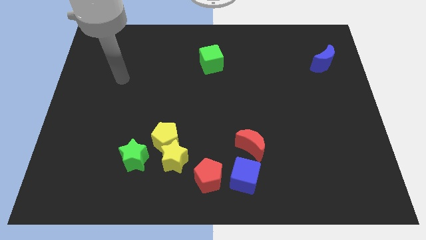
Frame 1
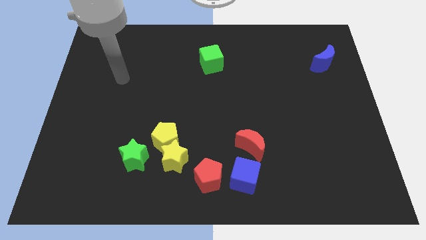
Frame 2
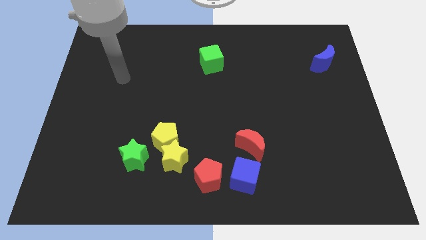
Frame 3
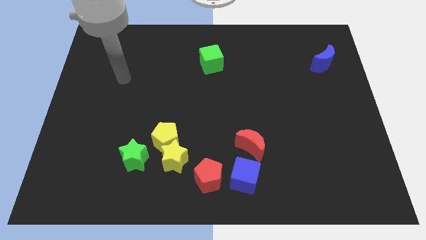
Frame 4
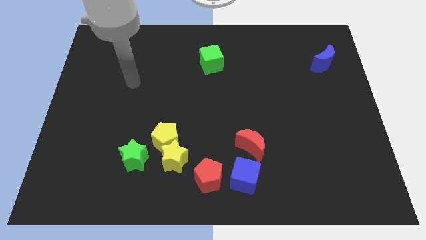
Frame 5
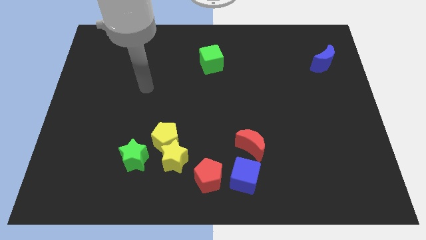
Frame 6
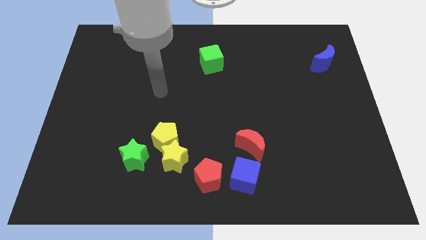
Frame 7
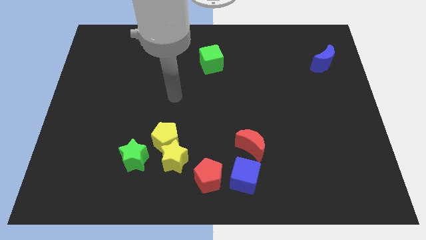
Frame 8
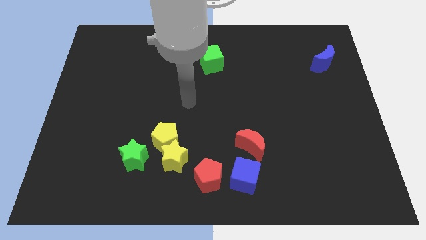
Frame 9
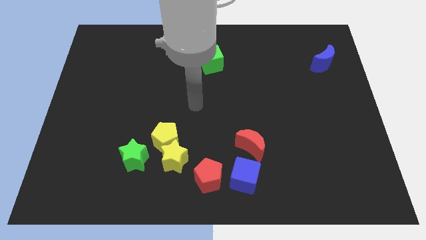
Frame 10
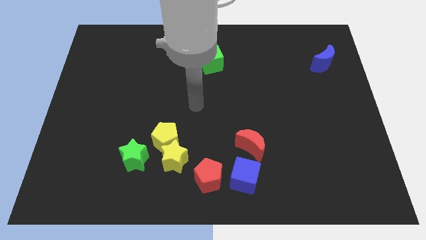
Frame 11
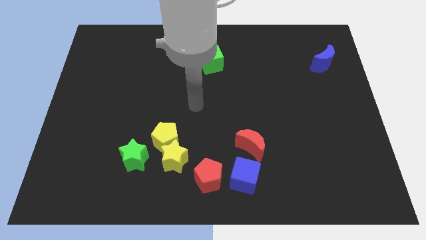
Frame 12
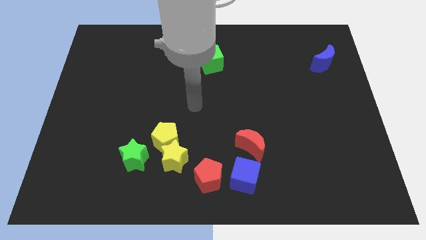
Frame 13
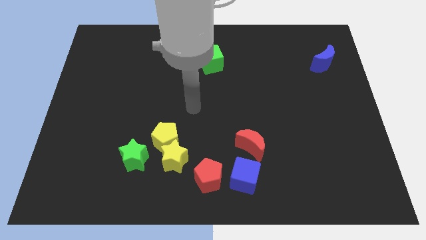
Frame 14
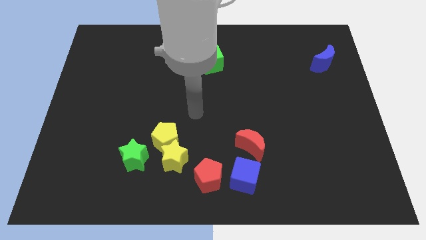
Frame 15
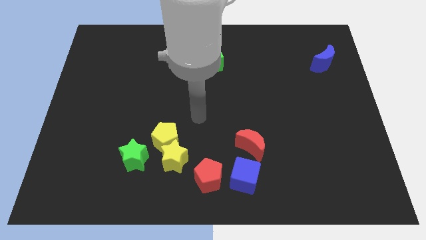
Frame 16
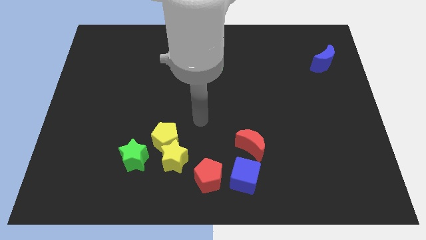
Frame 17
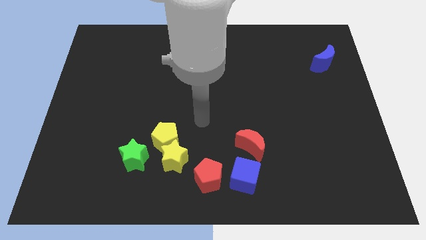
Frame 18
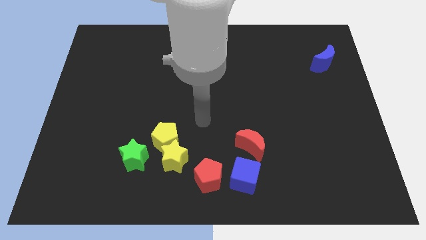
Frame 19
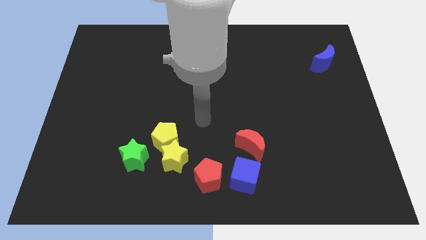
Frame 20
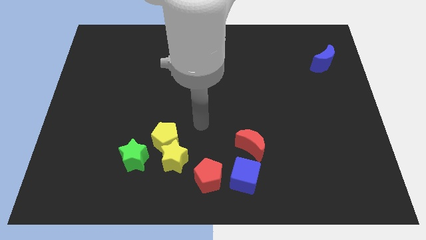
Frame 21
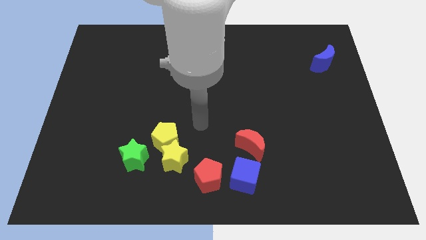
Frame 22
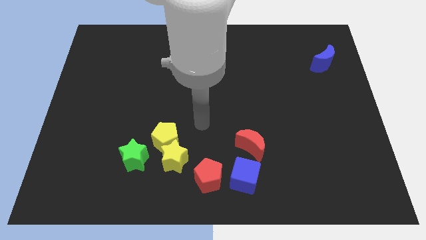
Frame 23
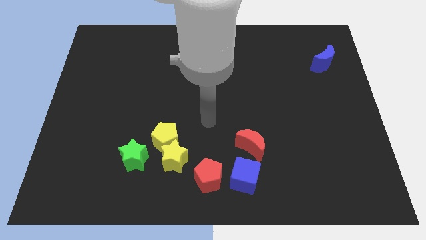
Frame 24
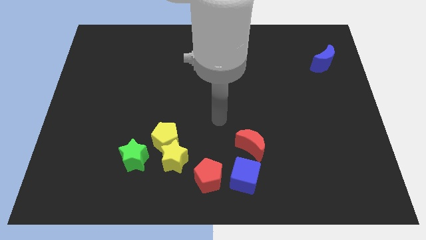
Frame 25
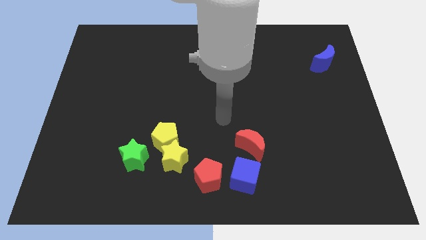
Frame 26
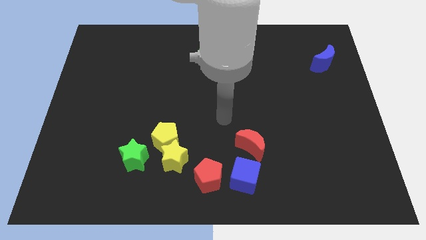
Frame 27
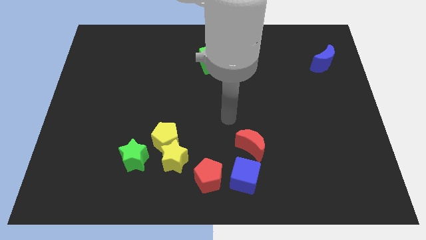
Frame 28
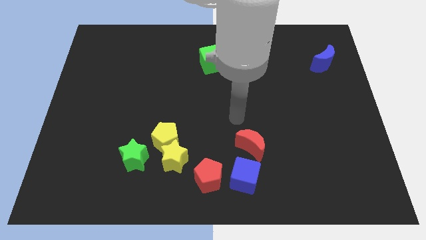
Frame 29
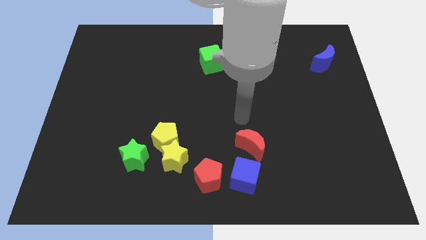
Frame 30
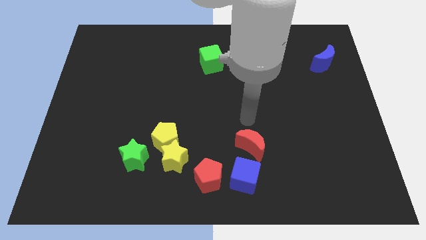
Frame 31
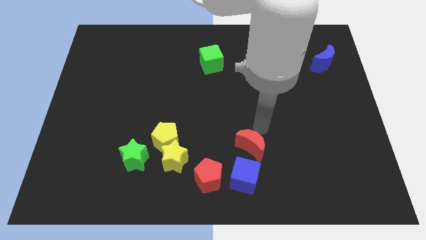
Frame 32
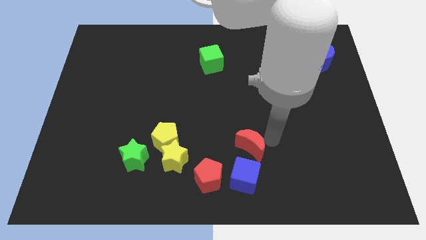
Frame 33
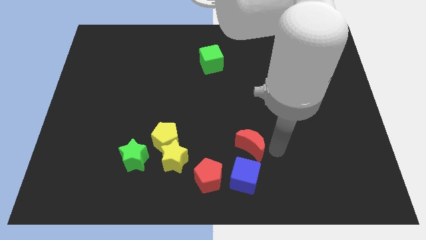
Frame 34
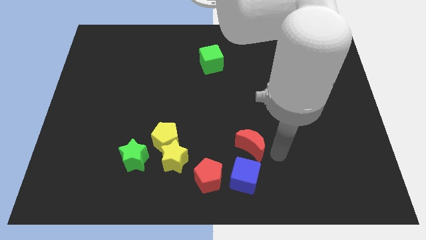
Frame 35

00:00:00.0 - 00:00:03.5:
place your arm to the right of red moon

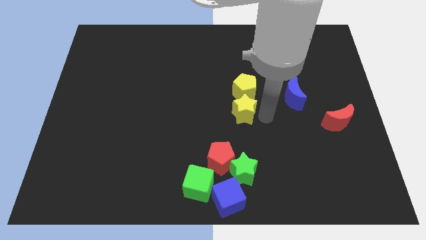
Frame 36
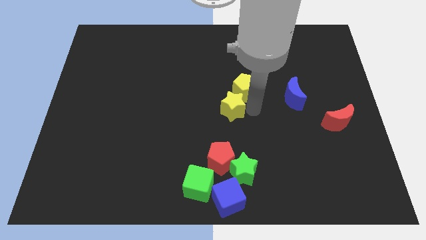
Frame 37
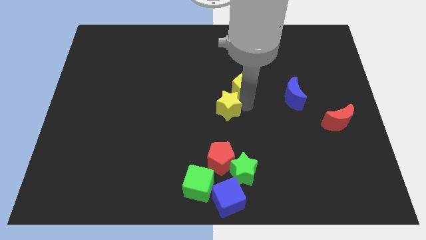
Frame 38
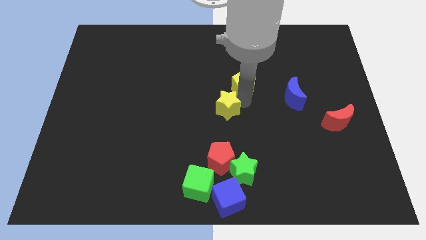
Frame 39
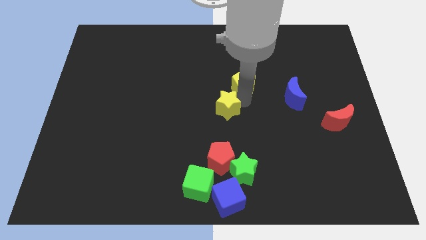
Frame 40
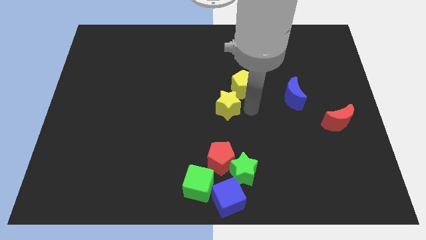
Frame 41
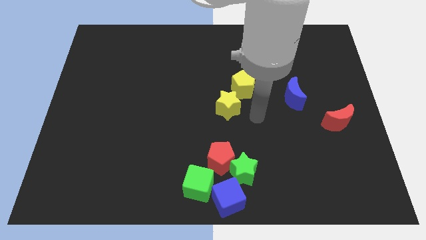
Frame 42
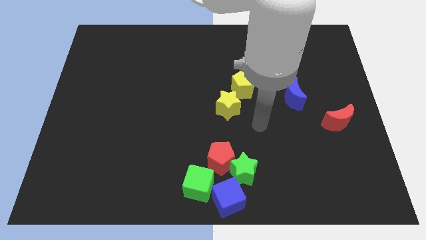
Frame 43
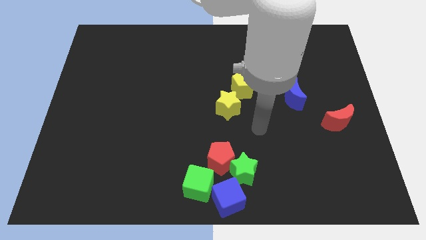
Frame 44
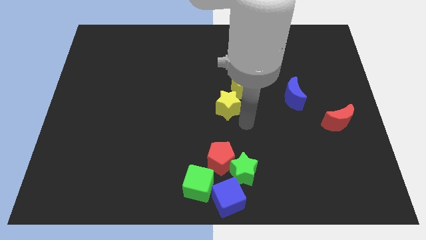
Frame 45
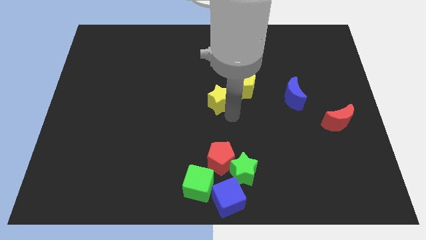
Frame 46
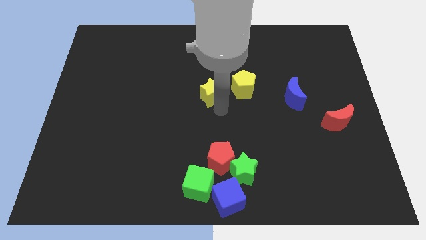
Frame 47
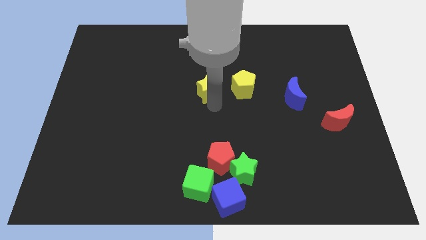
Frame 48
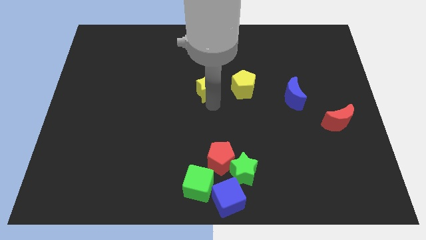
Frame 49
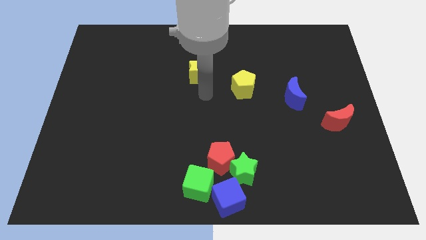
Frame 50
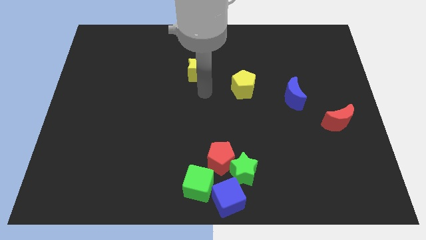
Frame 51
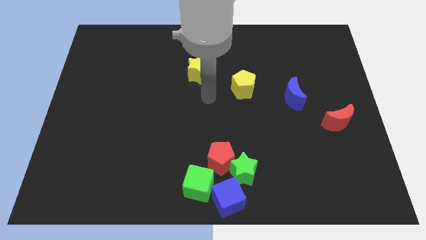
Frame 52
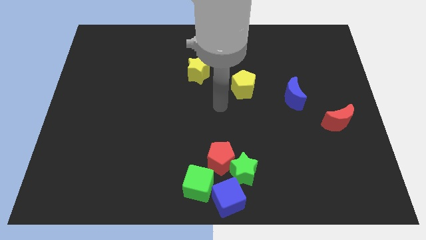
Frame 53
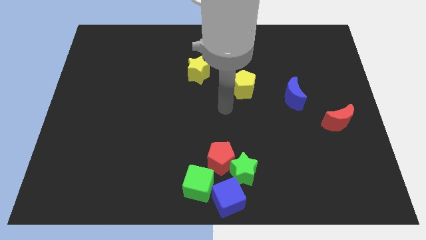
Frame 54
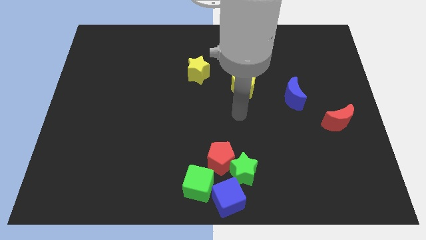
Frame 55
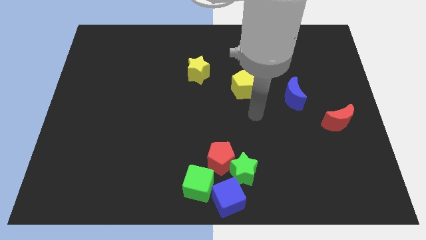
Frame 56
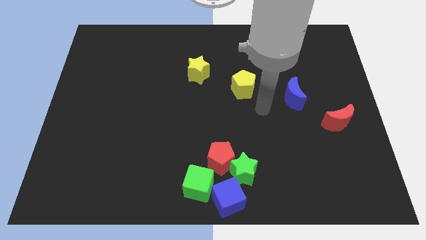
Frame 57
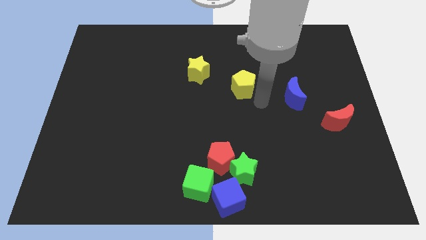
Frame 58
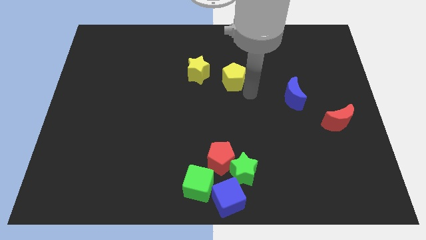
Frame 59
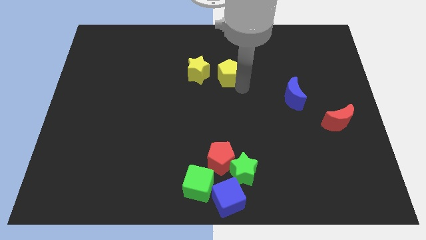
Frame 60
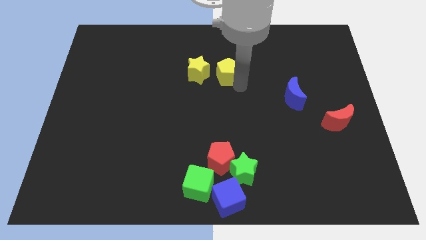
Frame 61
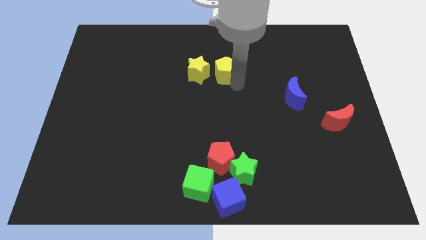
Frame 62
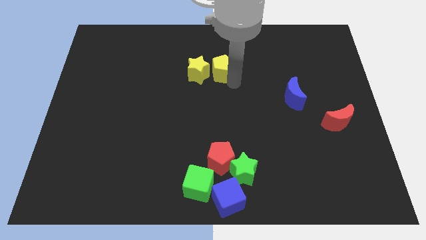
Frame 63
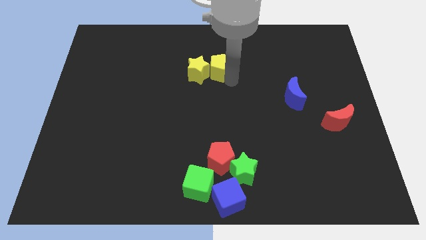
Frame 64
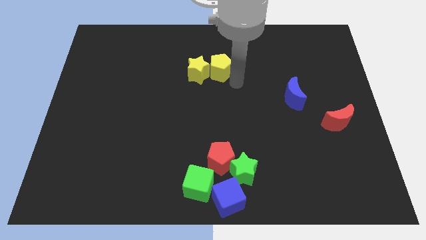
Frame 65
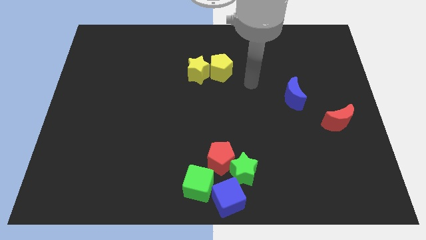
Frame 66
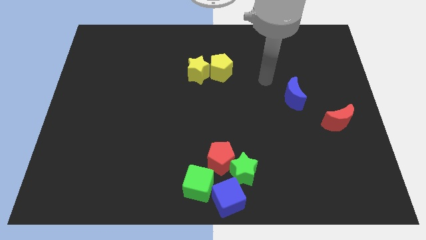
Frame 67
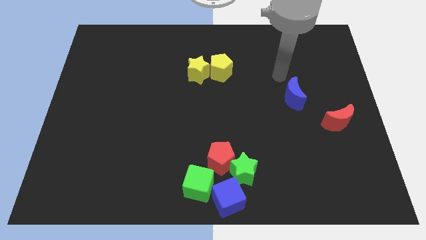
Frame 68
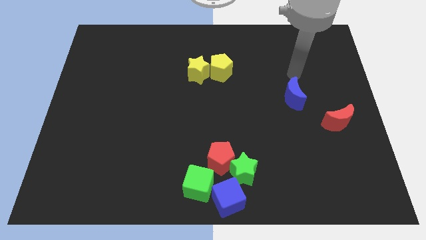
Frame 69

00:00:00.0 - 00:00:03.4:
push the yellow star to the left side of the yellow pentagon

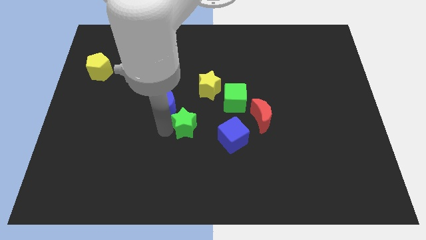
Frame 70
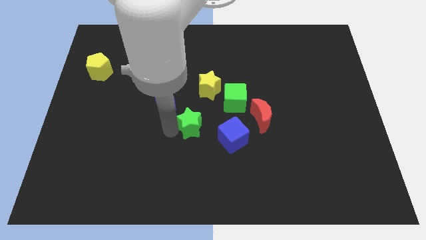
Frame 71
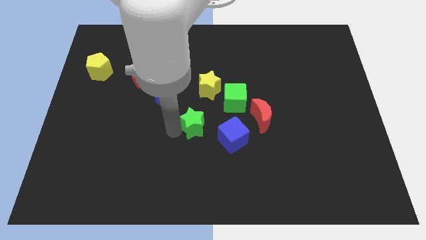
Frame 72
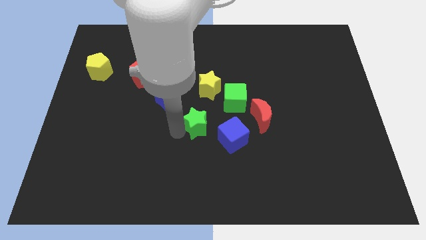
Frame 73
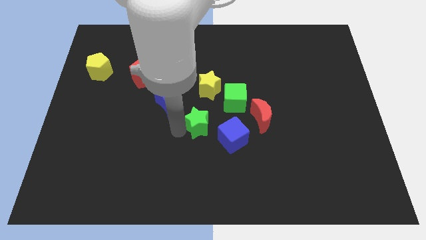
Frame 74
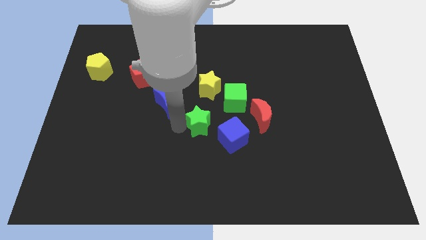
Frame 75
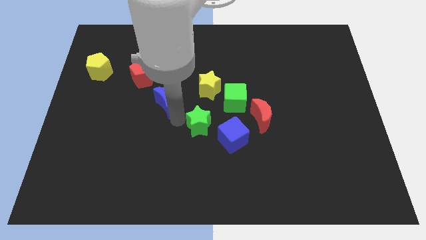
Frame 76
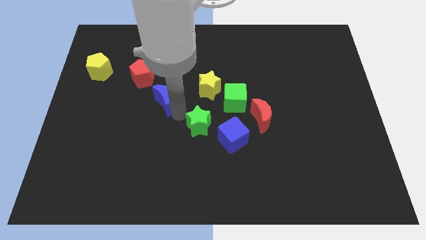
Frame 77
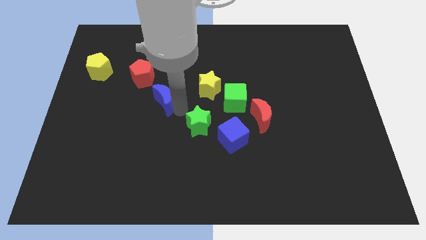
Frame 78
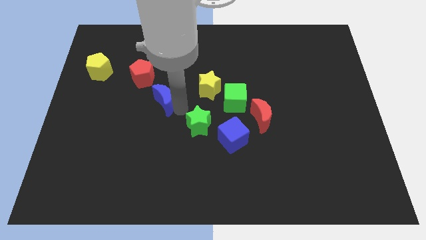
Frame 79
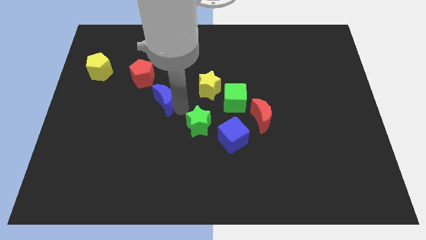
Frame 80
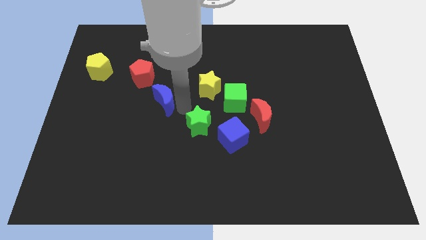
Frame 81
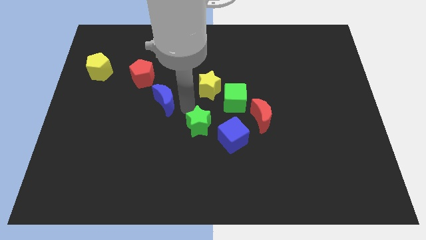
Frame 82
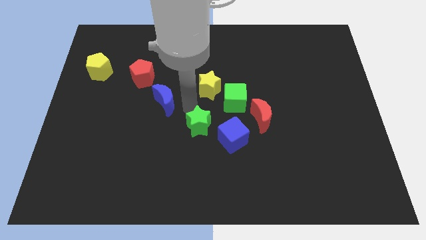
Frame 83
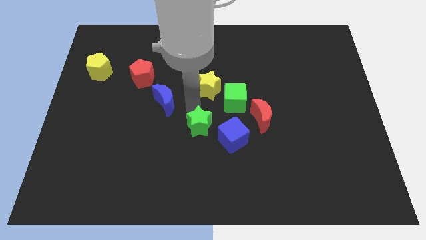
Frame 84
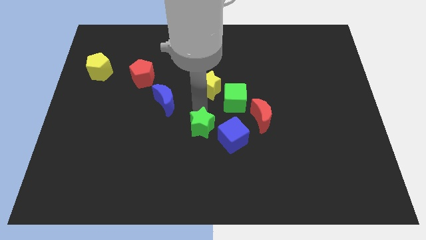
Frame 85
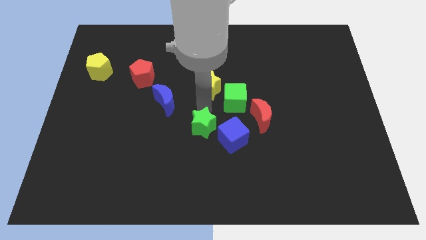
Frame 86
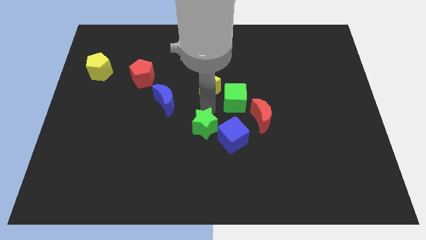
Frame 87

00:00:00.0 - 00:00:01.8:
move the green star below the yellow star

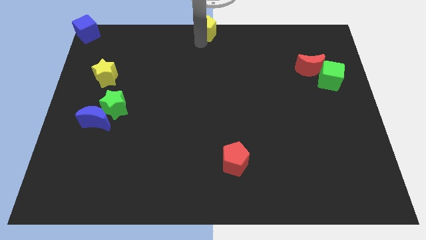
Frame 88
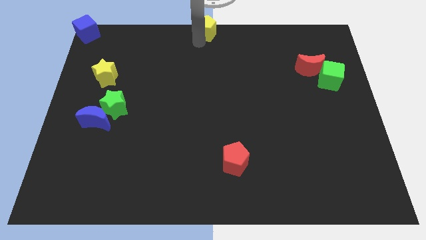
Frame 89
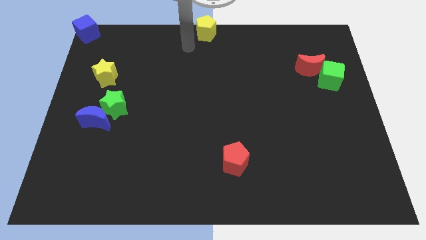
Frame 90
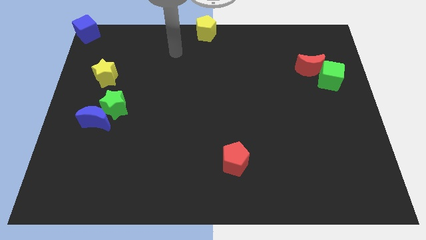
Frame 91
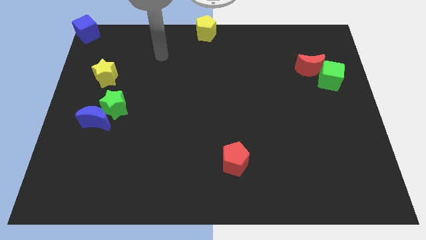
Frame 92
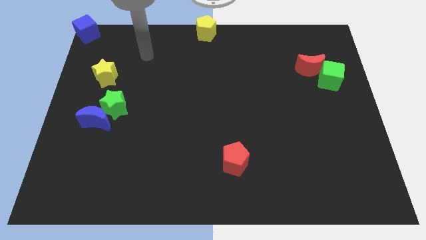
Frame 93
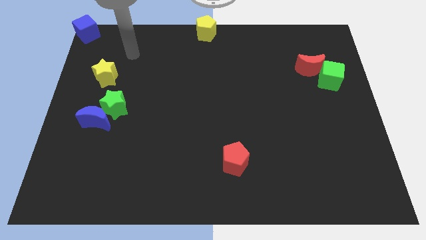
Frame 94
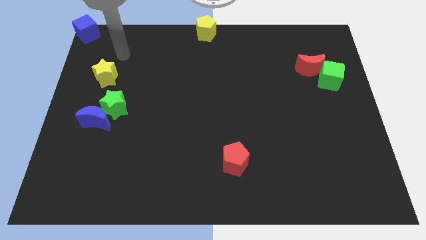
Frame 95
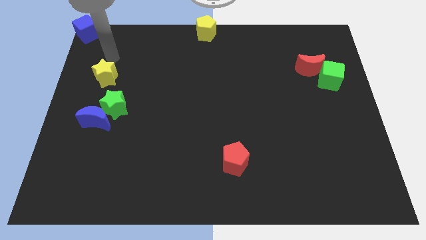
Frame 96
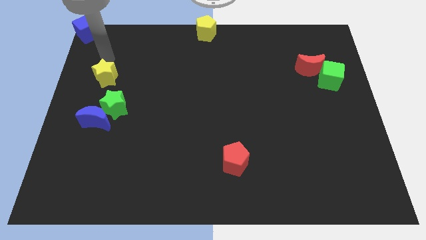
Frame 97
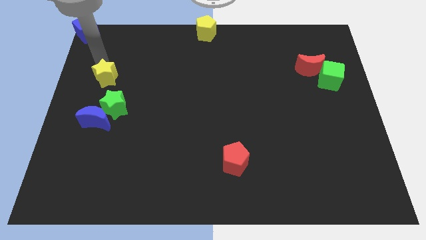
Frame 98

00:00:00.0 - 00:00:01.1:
move the arm away from the yellow pentagon
